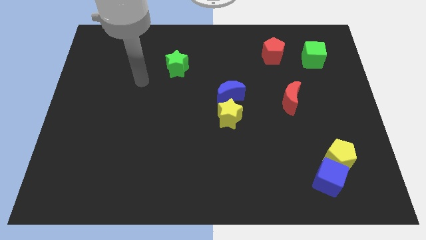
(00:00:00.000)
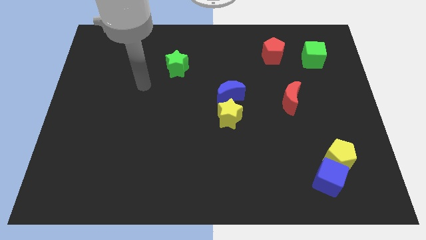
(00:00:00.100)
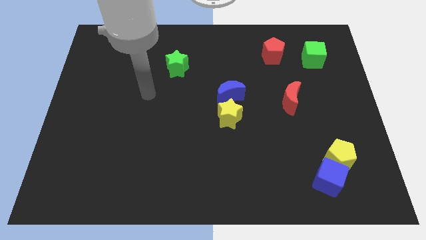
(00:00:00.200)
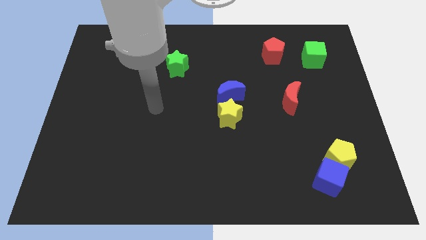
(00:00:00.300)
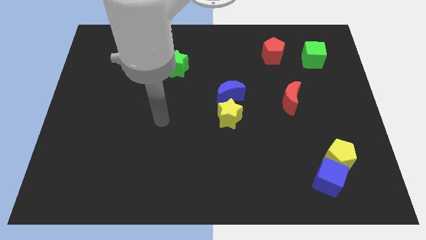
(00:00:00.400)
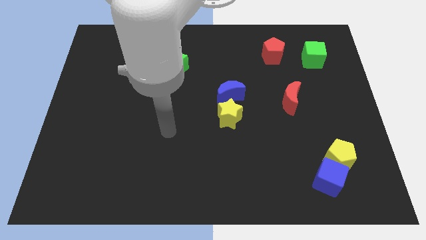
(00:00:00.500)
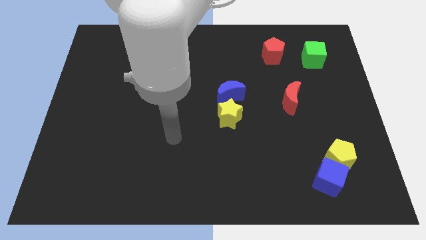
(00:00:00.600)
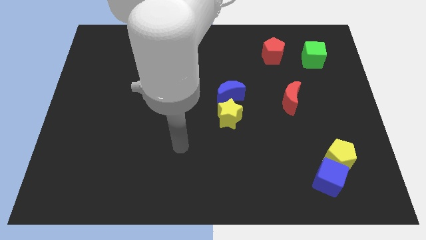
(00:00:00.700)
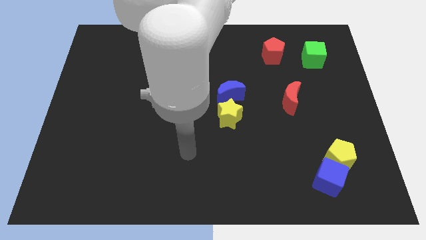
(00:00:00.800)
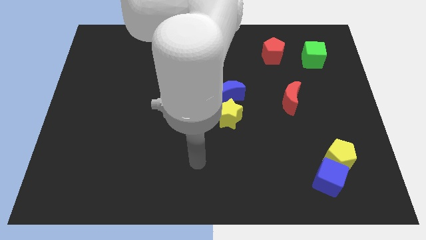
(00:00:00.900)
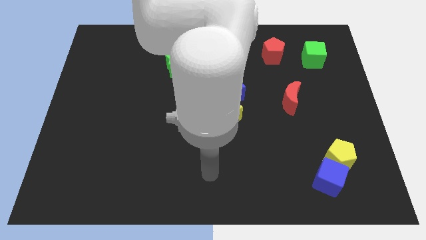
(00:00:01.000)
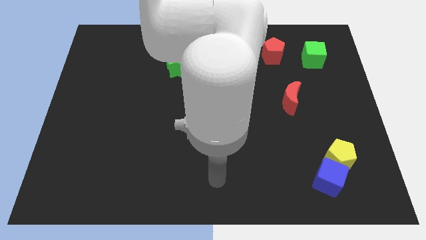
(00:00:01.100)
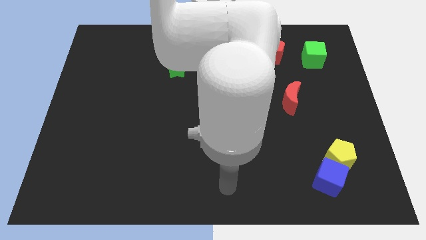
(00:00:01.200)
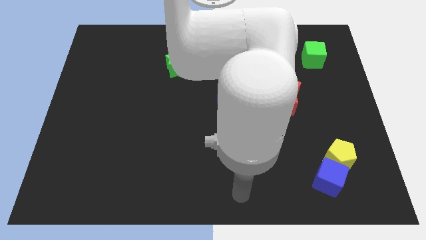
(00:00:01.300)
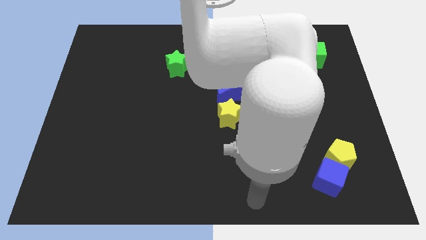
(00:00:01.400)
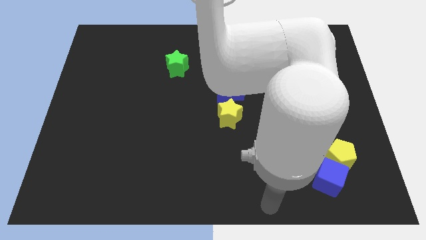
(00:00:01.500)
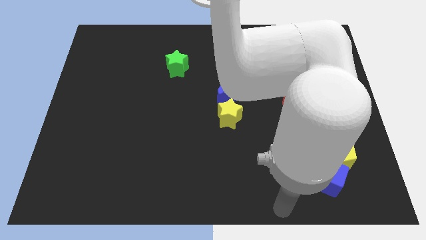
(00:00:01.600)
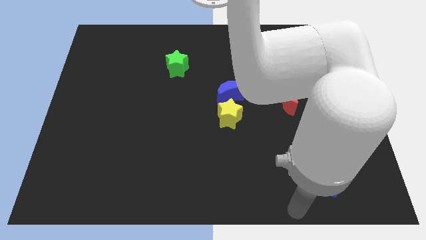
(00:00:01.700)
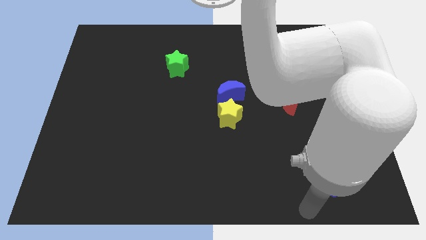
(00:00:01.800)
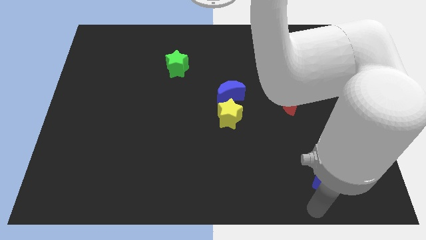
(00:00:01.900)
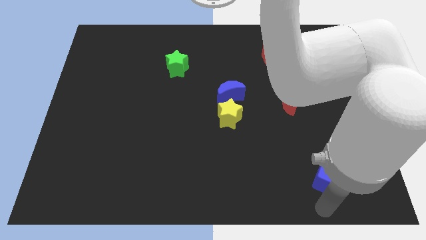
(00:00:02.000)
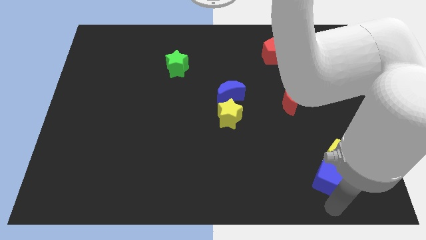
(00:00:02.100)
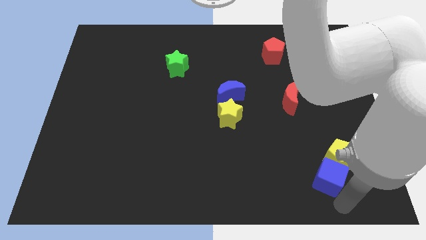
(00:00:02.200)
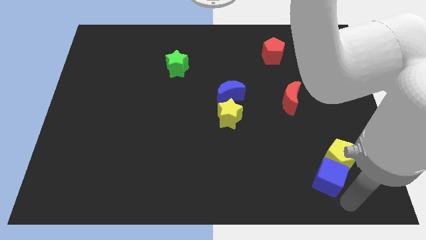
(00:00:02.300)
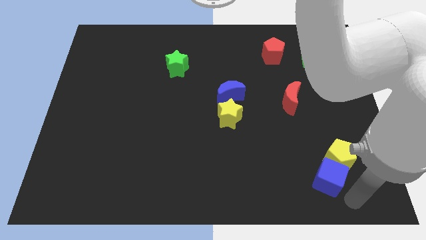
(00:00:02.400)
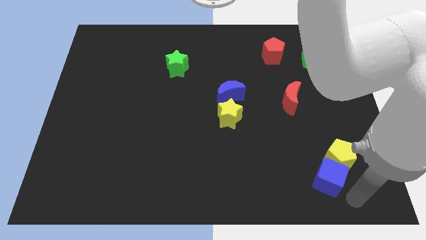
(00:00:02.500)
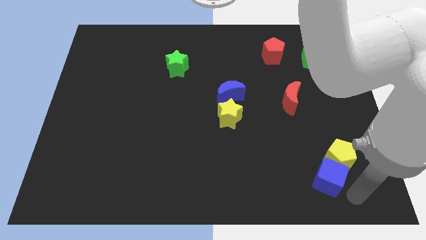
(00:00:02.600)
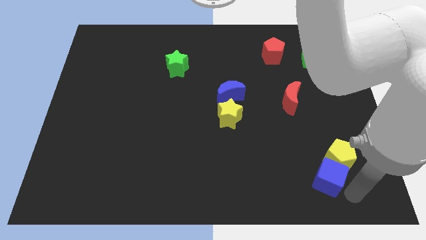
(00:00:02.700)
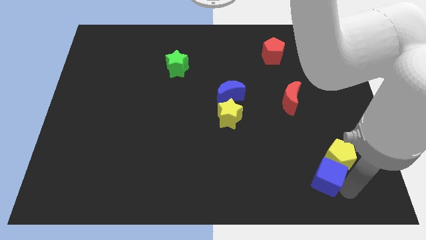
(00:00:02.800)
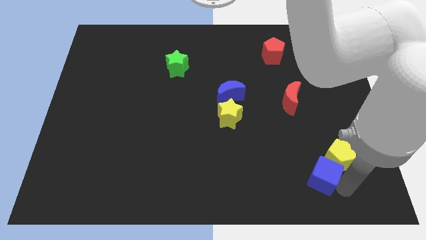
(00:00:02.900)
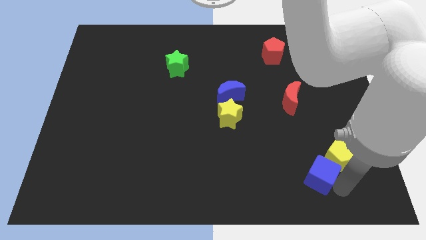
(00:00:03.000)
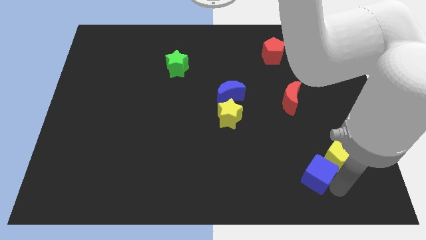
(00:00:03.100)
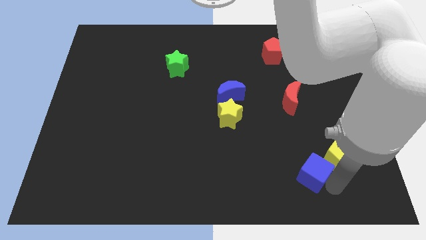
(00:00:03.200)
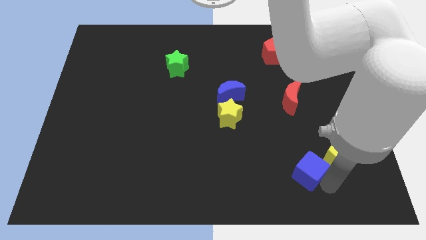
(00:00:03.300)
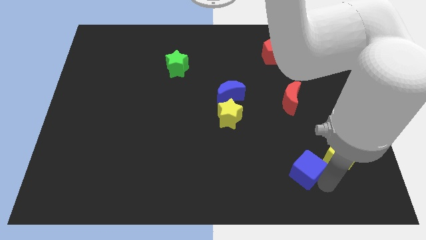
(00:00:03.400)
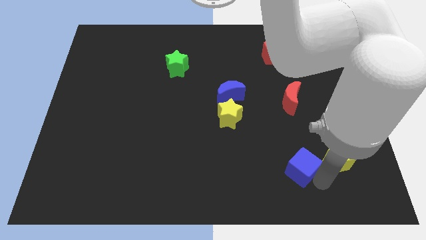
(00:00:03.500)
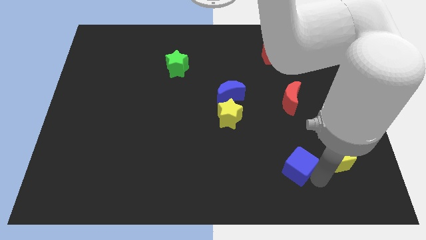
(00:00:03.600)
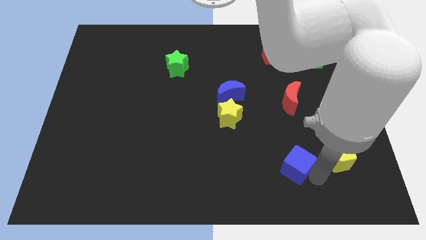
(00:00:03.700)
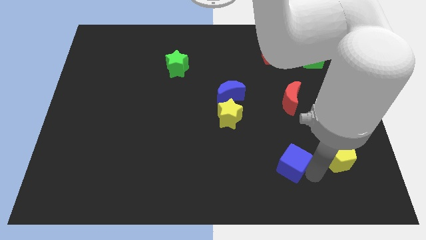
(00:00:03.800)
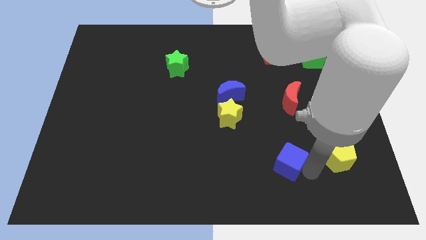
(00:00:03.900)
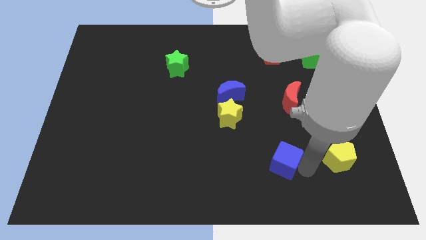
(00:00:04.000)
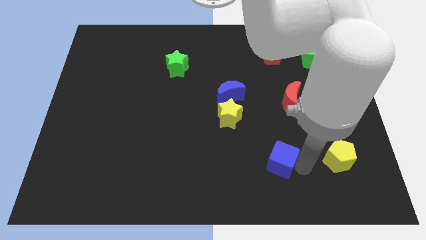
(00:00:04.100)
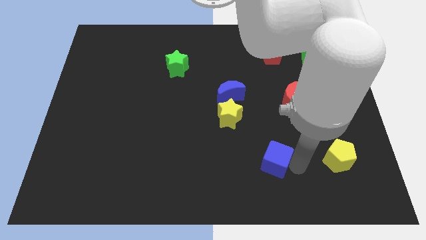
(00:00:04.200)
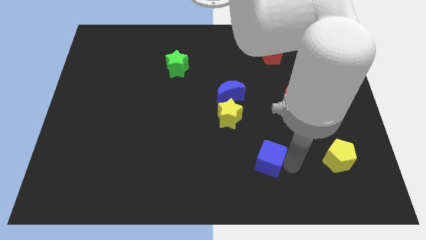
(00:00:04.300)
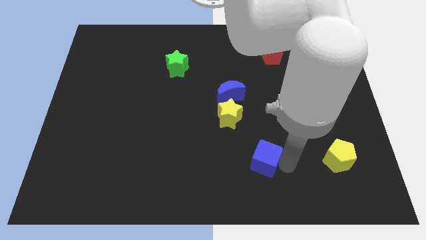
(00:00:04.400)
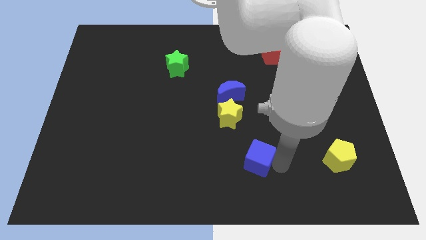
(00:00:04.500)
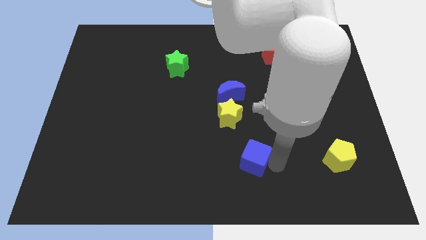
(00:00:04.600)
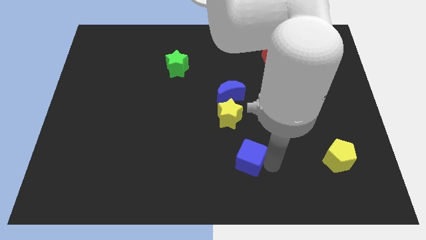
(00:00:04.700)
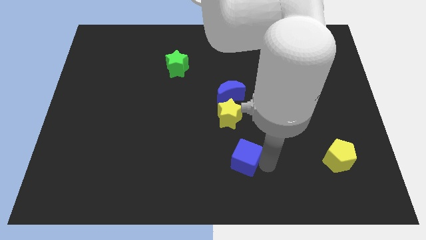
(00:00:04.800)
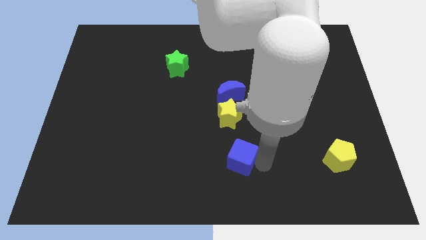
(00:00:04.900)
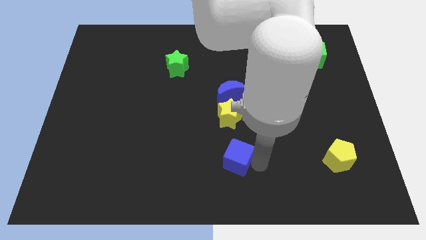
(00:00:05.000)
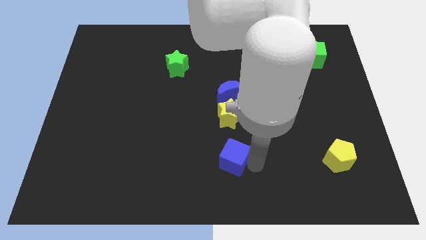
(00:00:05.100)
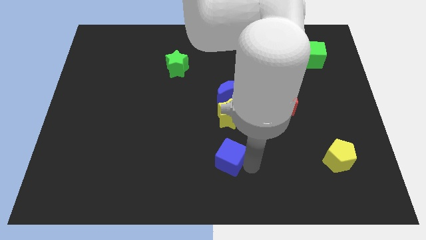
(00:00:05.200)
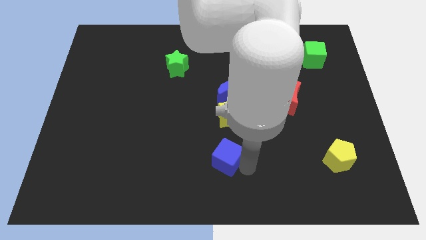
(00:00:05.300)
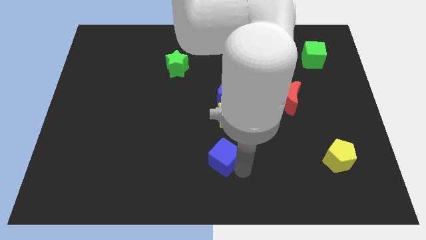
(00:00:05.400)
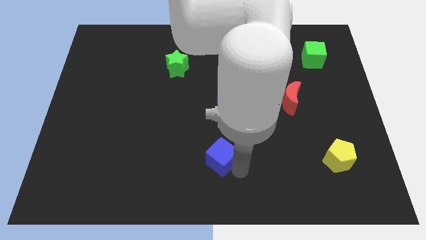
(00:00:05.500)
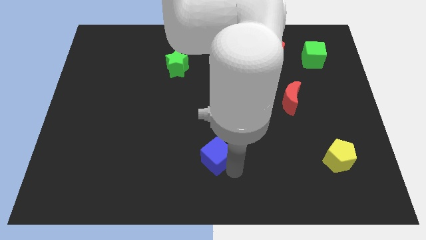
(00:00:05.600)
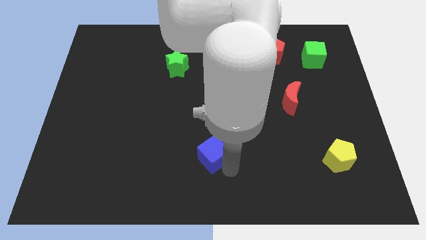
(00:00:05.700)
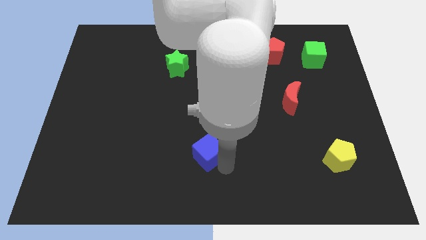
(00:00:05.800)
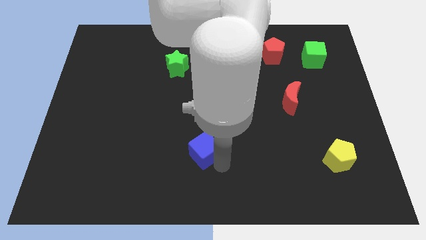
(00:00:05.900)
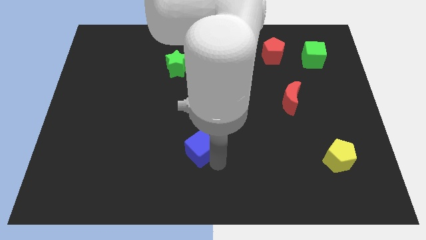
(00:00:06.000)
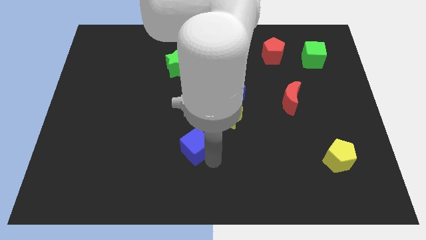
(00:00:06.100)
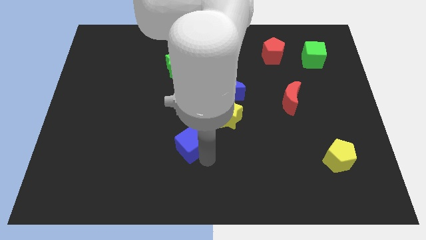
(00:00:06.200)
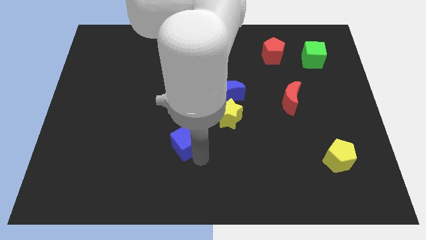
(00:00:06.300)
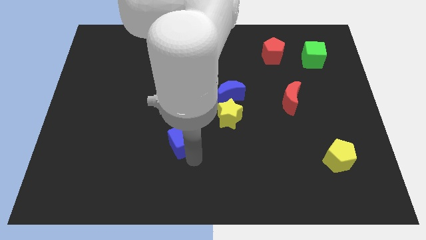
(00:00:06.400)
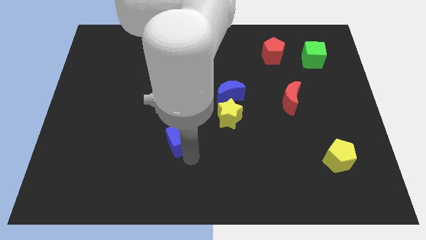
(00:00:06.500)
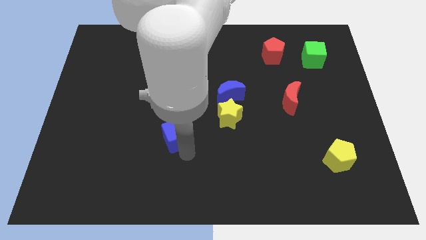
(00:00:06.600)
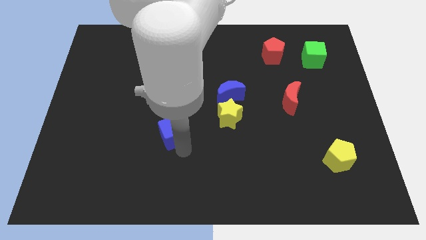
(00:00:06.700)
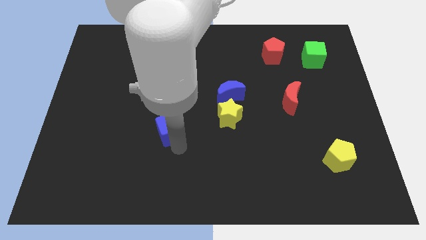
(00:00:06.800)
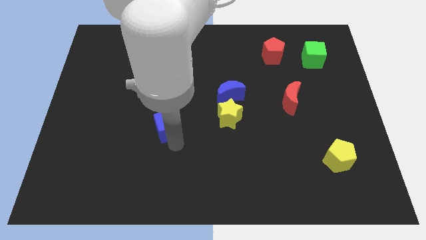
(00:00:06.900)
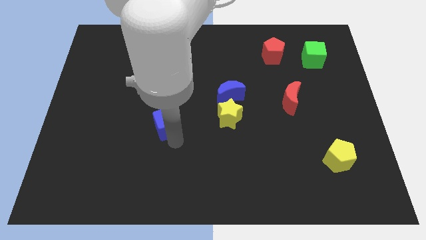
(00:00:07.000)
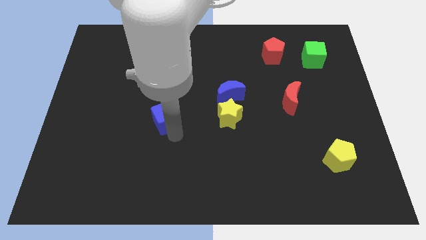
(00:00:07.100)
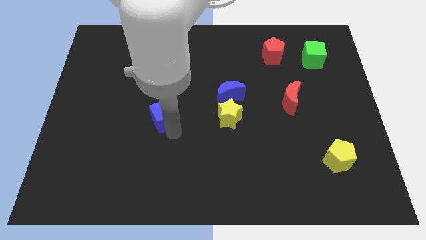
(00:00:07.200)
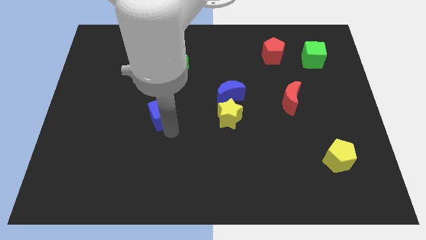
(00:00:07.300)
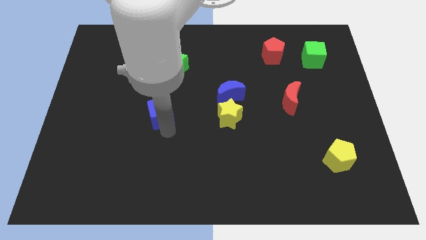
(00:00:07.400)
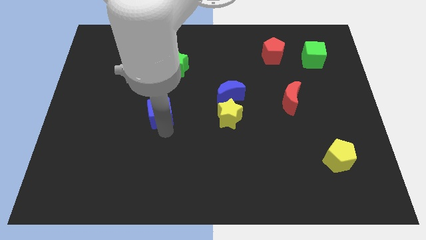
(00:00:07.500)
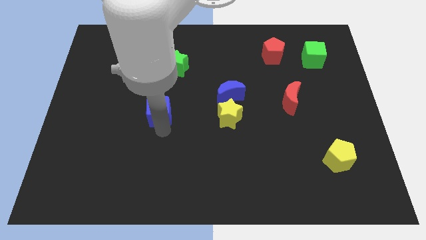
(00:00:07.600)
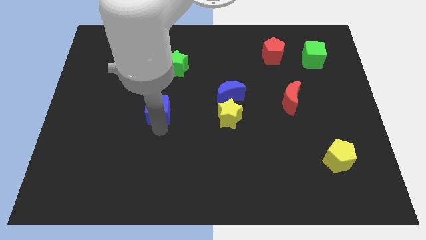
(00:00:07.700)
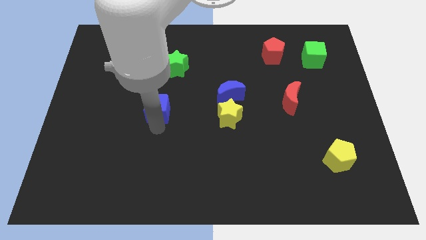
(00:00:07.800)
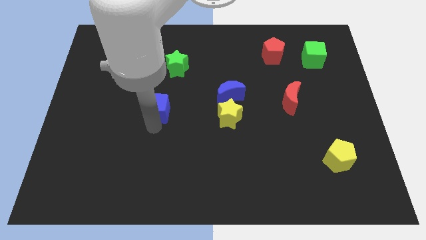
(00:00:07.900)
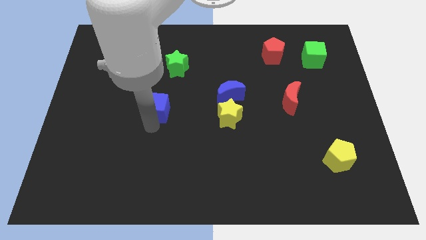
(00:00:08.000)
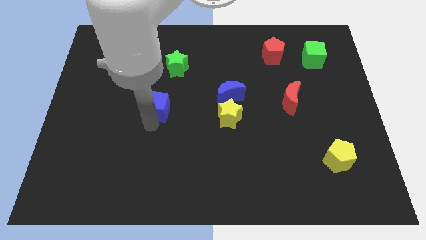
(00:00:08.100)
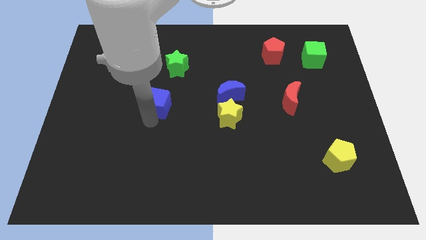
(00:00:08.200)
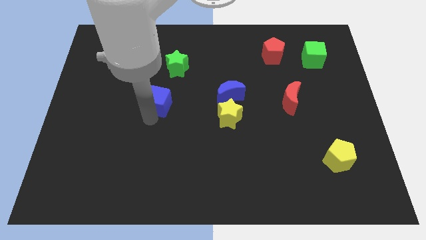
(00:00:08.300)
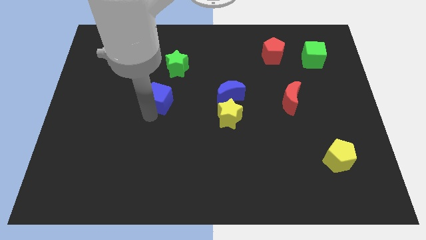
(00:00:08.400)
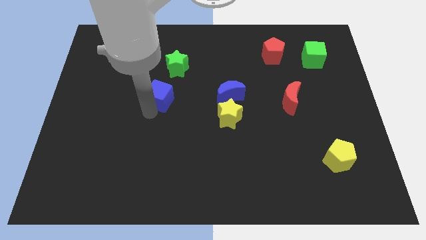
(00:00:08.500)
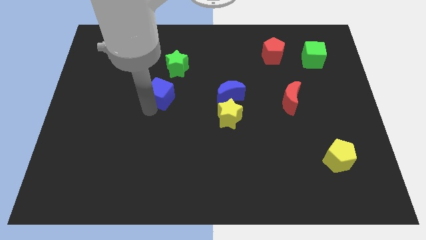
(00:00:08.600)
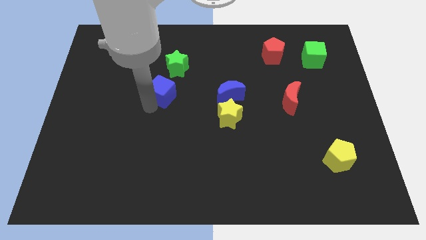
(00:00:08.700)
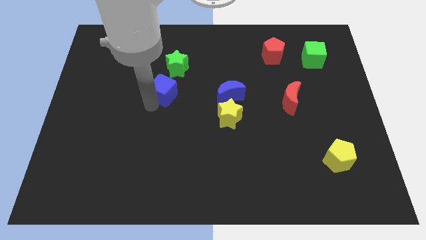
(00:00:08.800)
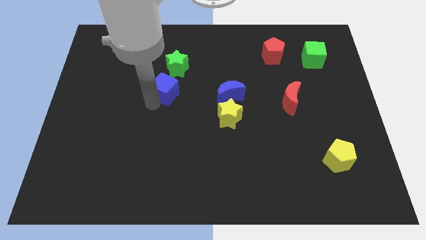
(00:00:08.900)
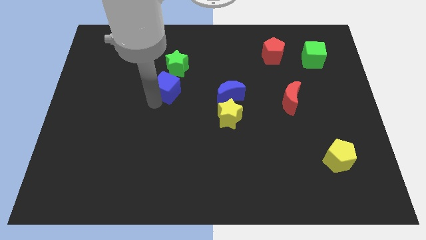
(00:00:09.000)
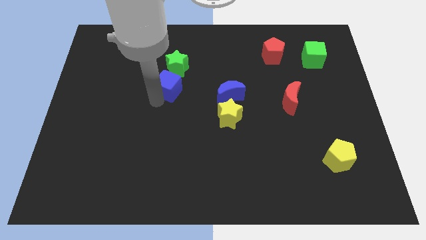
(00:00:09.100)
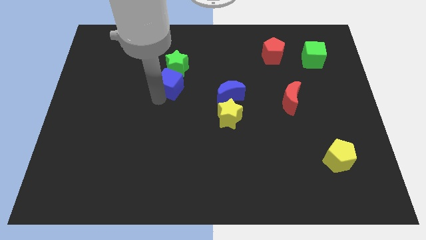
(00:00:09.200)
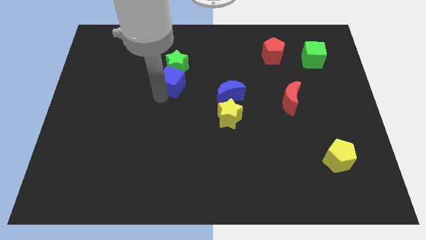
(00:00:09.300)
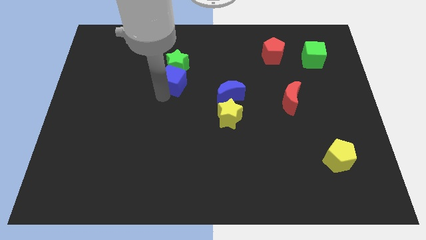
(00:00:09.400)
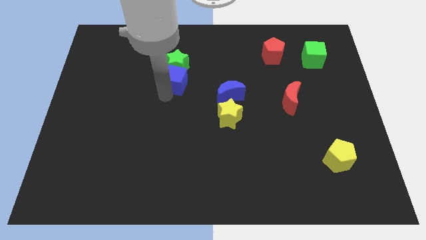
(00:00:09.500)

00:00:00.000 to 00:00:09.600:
move the blue cube close to the green star
